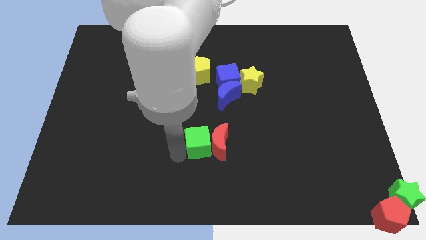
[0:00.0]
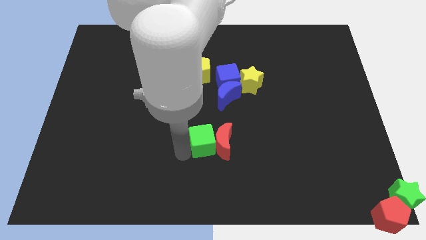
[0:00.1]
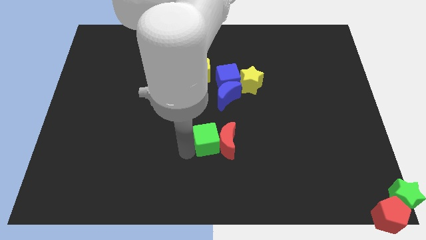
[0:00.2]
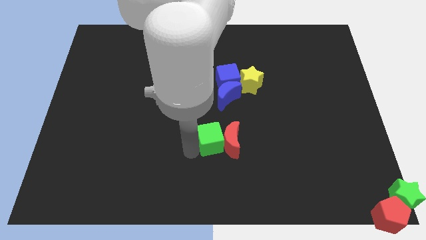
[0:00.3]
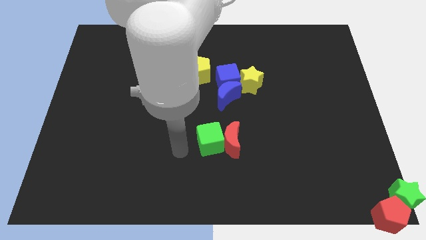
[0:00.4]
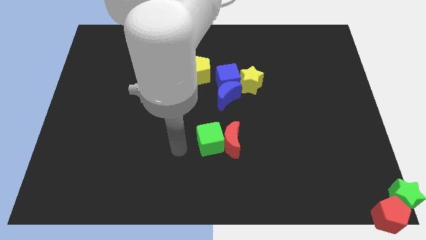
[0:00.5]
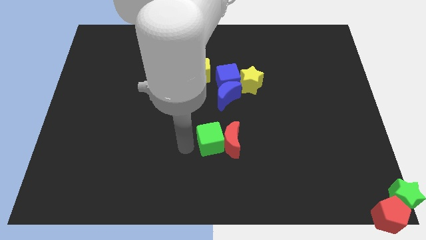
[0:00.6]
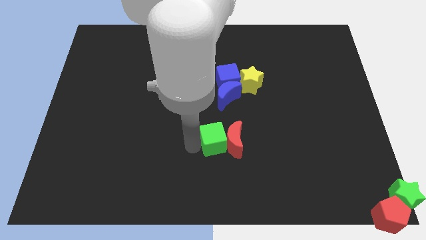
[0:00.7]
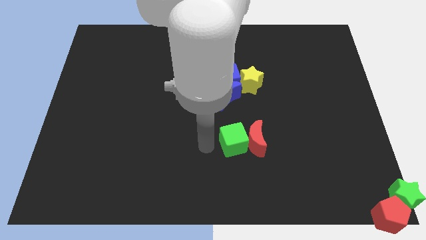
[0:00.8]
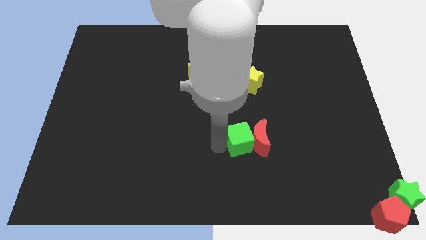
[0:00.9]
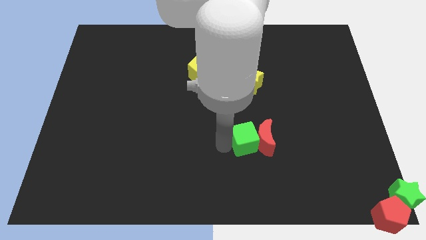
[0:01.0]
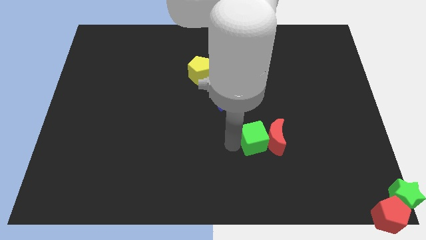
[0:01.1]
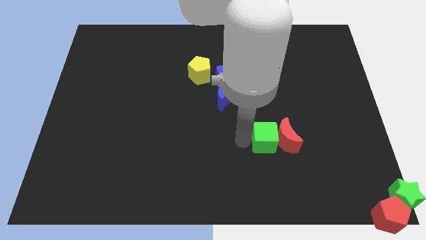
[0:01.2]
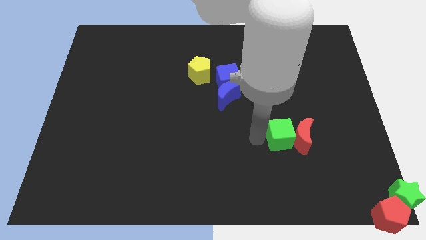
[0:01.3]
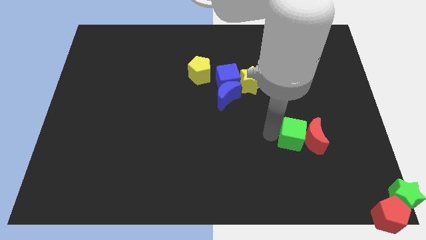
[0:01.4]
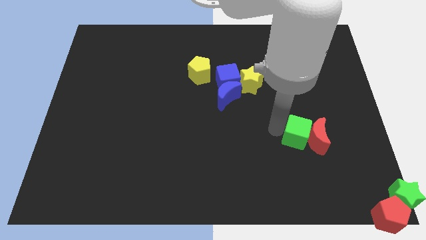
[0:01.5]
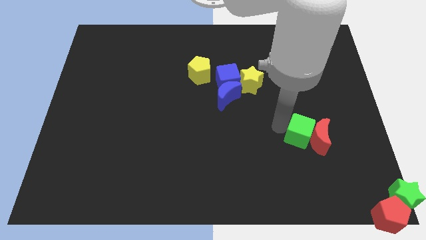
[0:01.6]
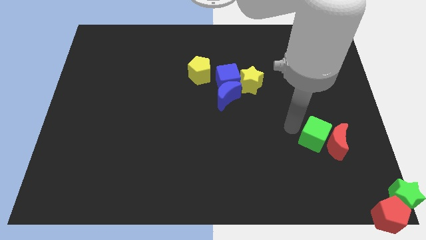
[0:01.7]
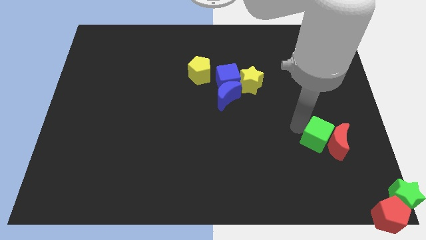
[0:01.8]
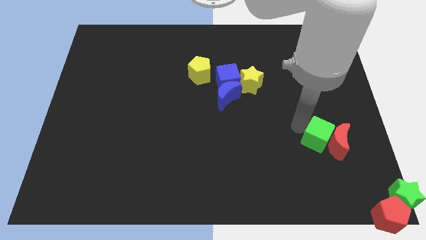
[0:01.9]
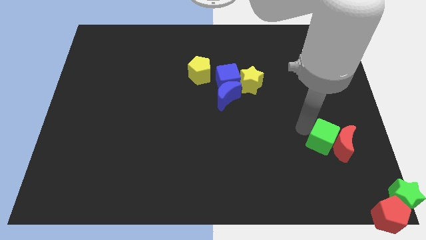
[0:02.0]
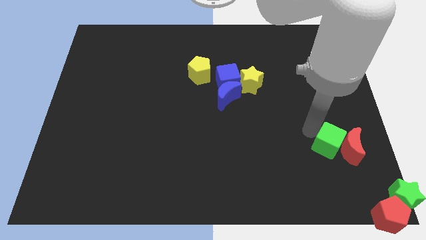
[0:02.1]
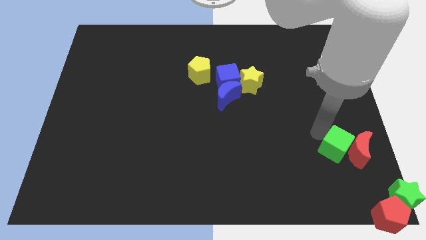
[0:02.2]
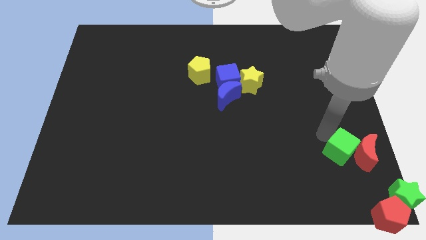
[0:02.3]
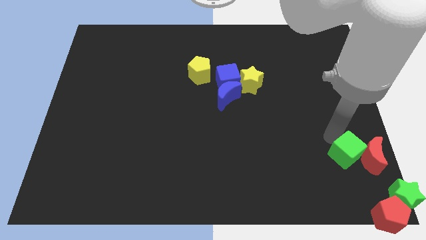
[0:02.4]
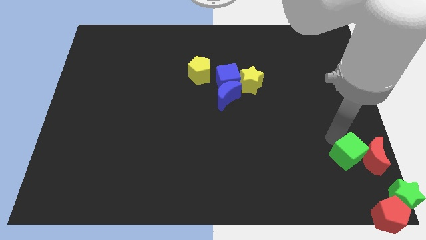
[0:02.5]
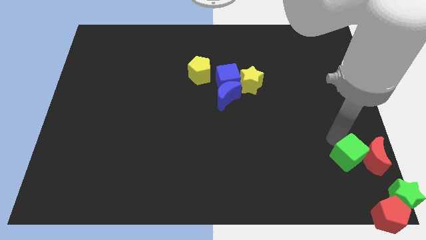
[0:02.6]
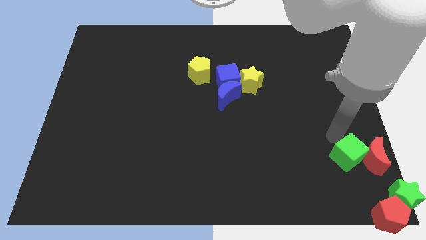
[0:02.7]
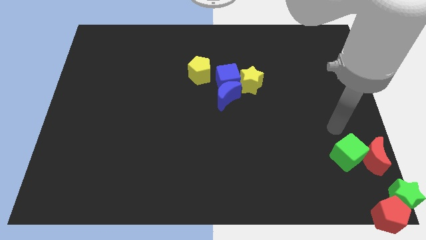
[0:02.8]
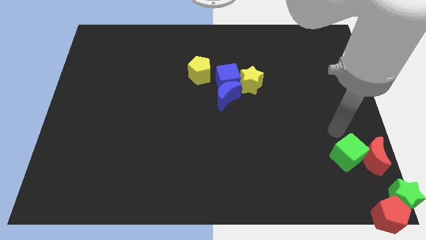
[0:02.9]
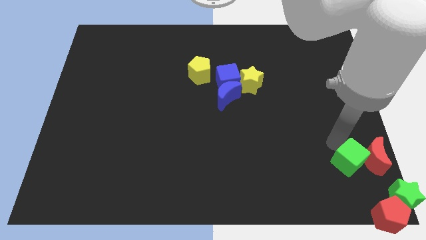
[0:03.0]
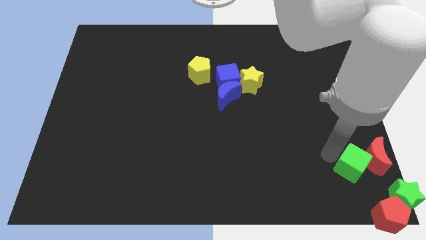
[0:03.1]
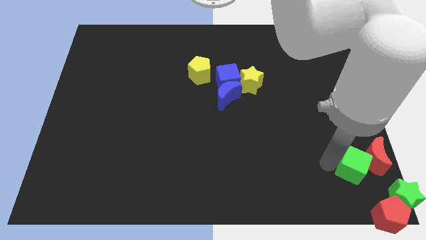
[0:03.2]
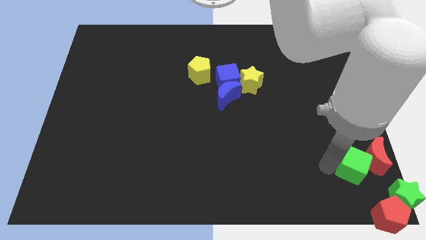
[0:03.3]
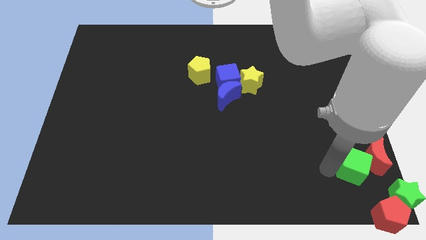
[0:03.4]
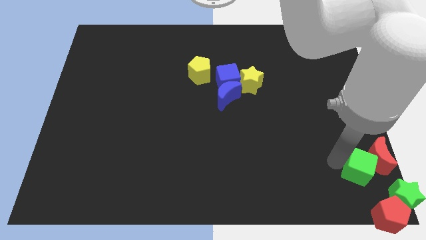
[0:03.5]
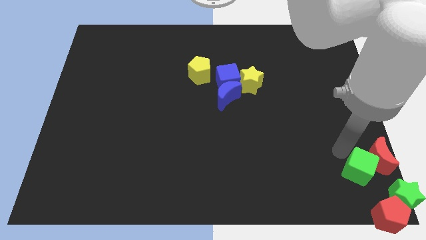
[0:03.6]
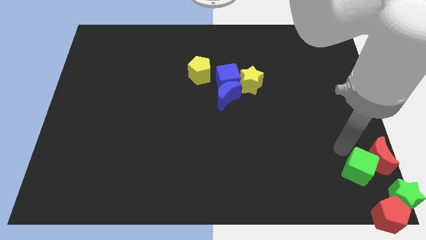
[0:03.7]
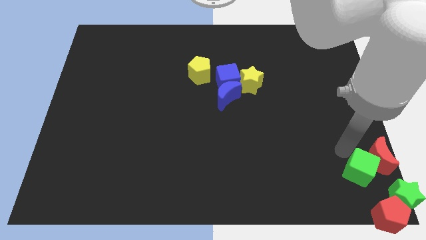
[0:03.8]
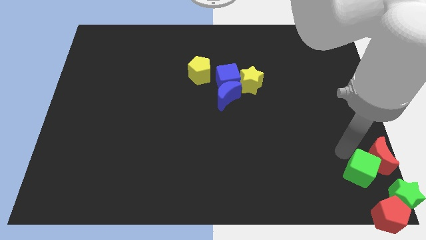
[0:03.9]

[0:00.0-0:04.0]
move the red moon and green cube to the bottom right of the board

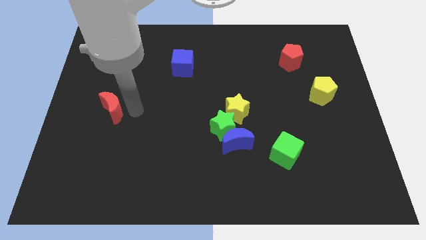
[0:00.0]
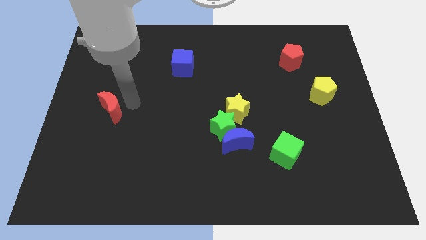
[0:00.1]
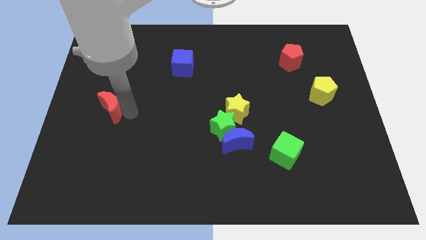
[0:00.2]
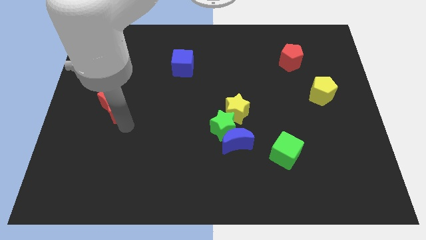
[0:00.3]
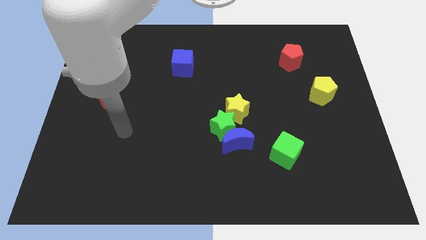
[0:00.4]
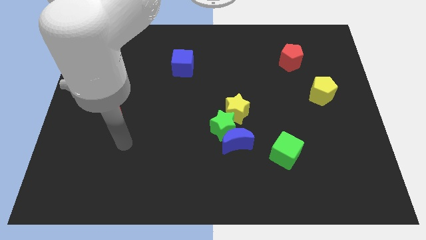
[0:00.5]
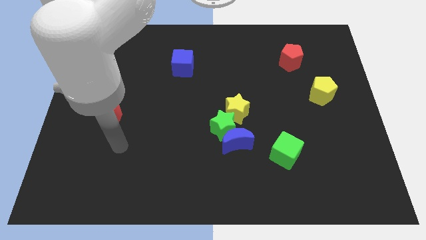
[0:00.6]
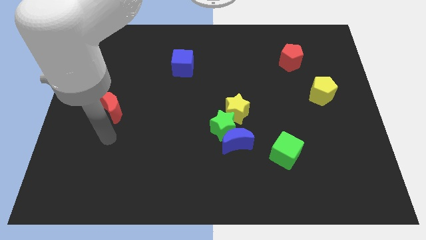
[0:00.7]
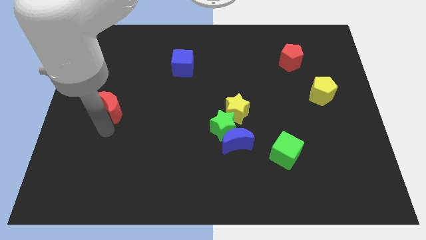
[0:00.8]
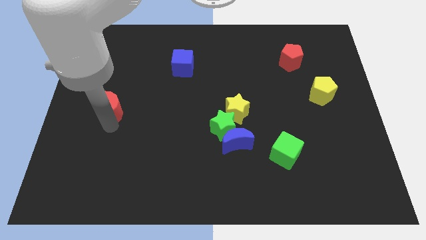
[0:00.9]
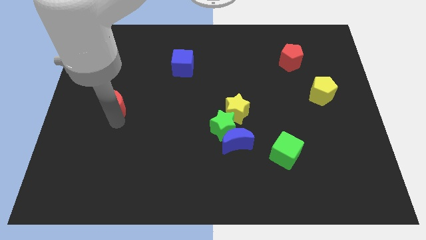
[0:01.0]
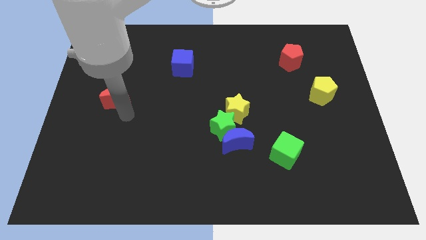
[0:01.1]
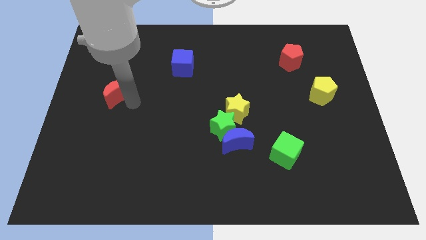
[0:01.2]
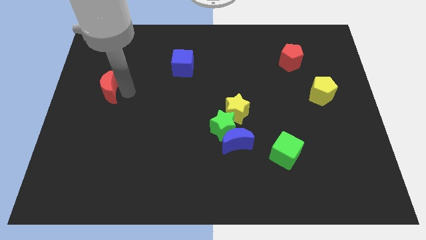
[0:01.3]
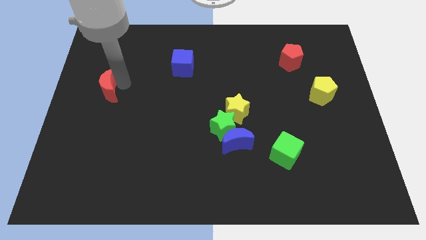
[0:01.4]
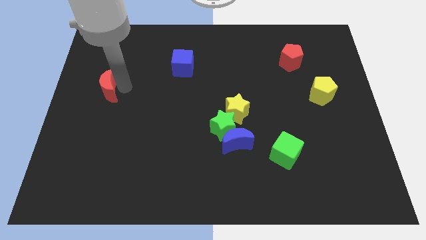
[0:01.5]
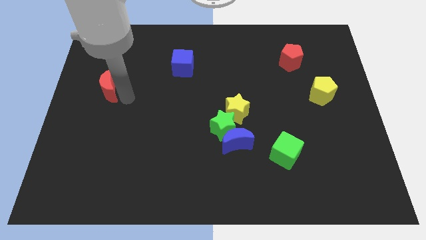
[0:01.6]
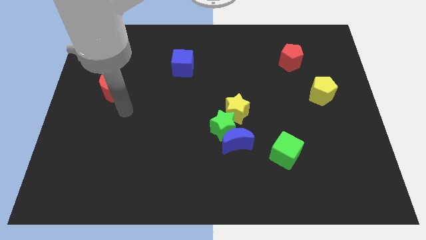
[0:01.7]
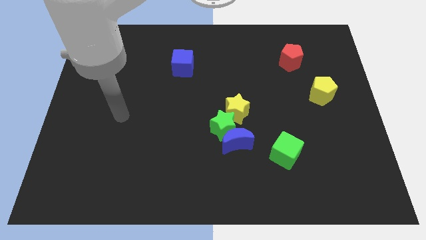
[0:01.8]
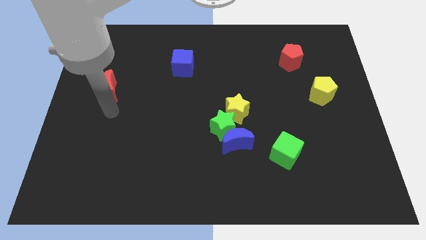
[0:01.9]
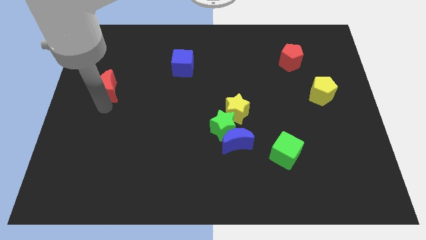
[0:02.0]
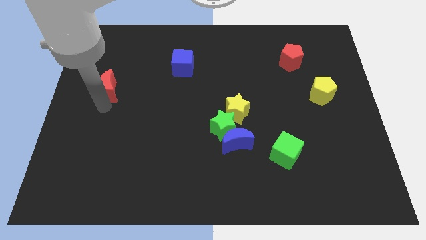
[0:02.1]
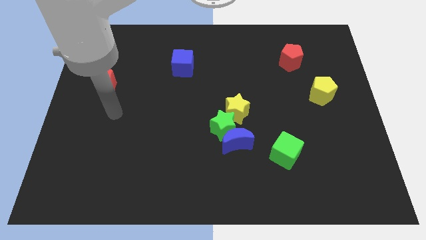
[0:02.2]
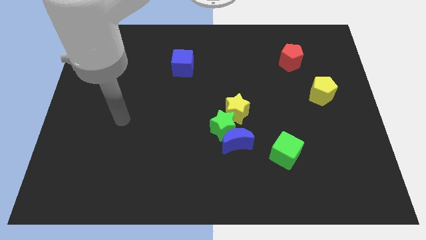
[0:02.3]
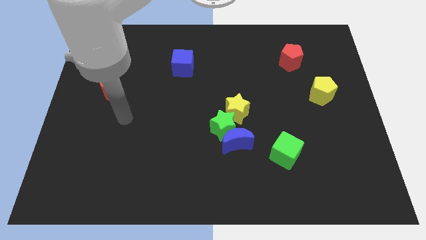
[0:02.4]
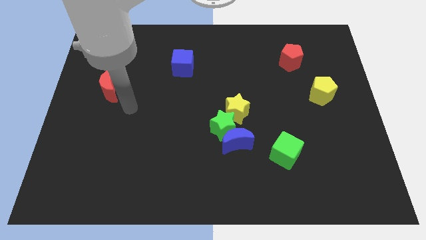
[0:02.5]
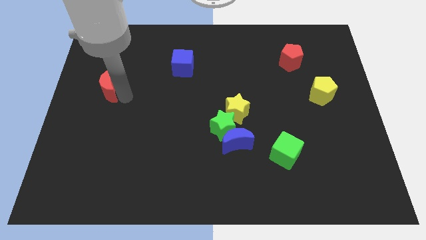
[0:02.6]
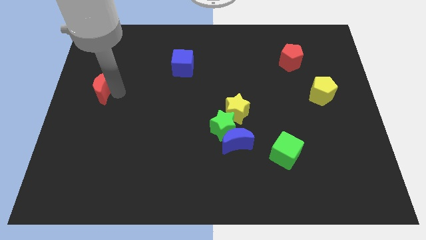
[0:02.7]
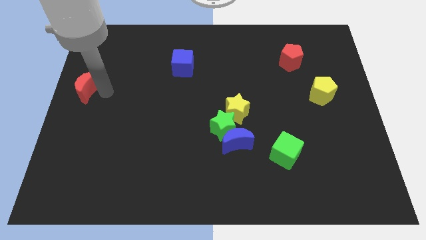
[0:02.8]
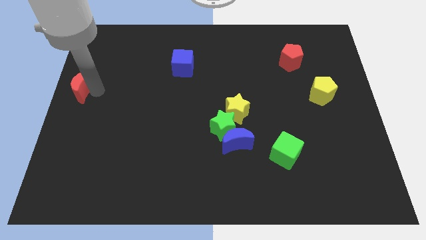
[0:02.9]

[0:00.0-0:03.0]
move the red crescent towards the top left side

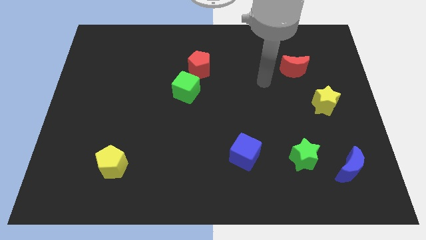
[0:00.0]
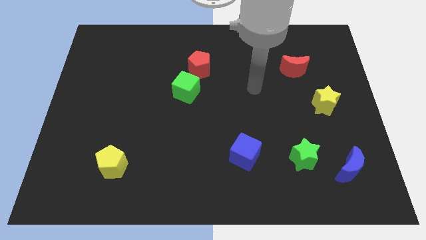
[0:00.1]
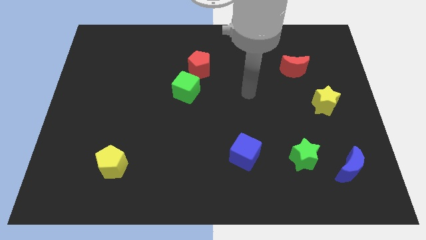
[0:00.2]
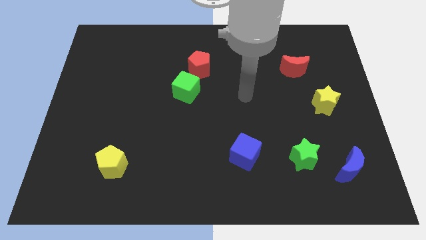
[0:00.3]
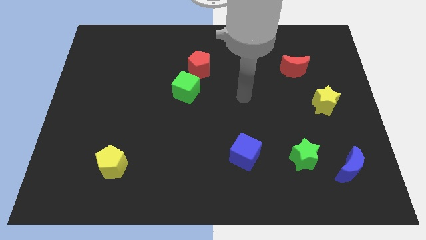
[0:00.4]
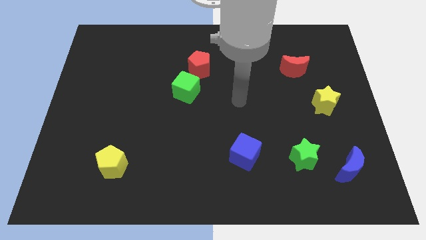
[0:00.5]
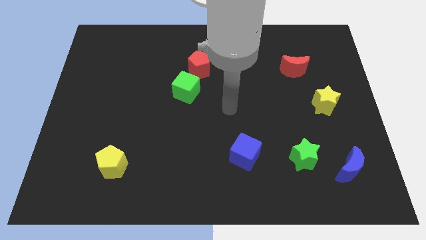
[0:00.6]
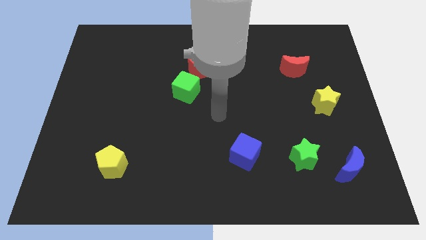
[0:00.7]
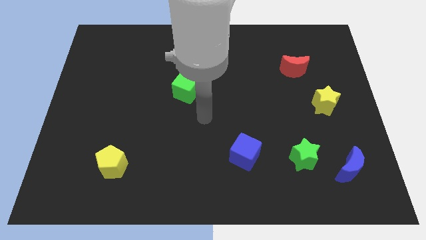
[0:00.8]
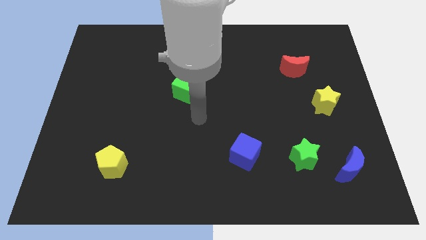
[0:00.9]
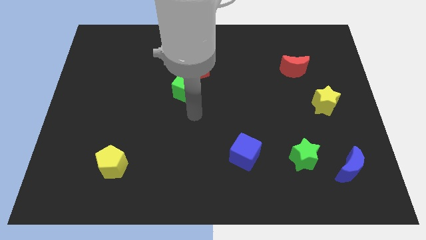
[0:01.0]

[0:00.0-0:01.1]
point your hand at the bottom side of the green cube

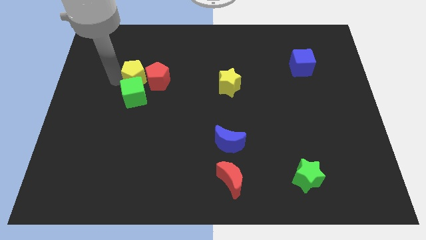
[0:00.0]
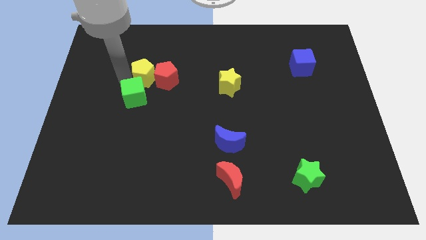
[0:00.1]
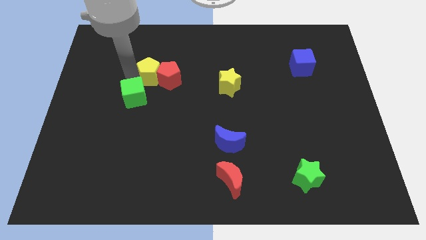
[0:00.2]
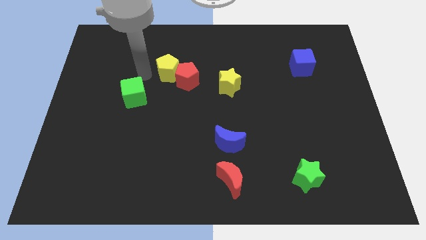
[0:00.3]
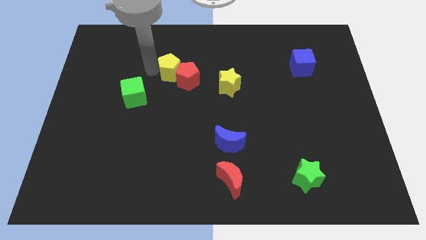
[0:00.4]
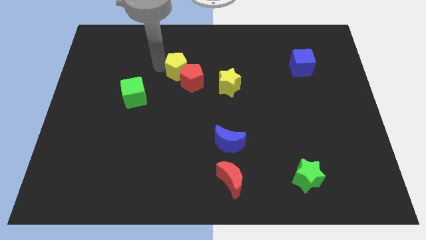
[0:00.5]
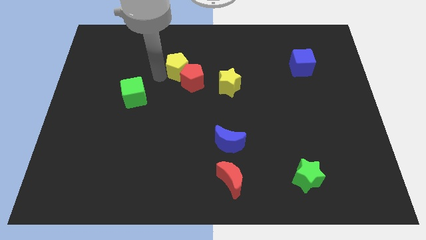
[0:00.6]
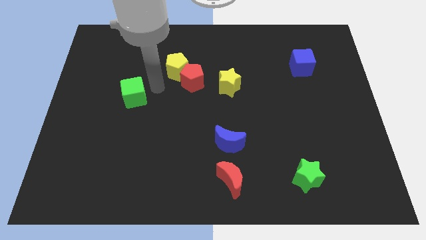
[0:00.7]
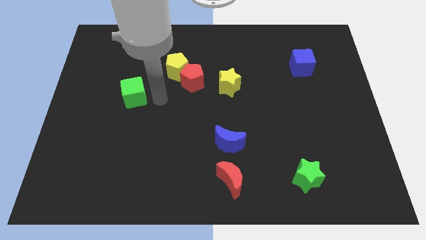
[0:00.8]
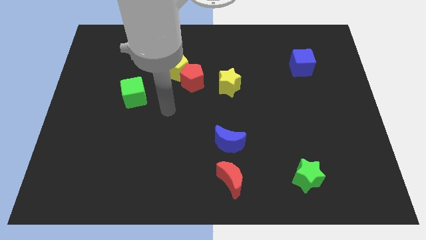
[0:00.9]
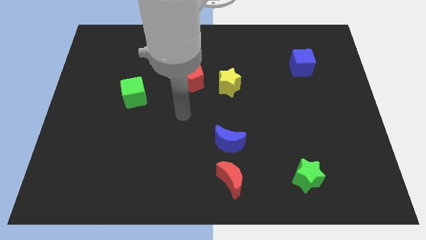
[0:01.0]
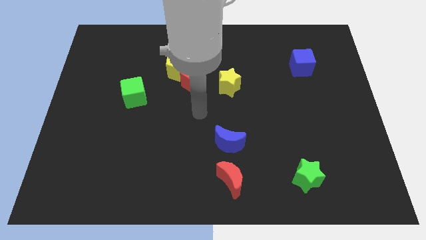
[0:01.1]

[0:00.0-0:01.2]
separate red and the yellow pentagon from the green cube
